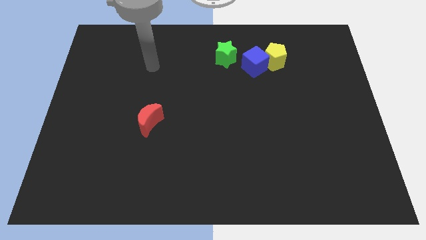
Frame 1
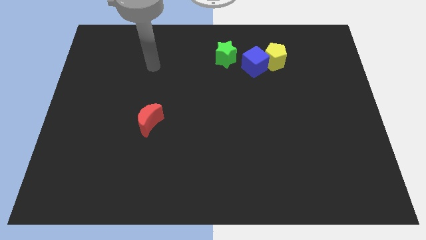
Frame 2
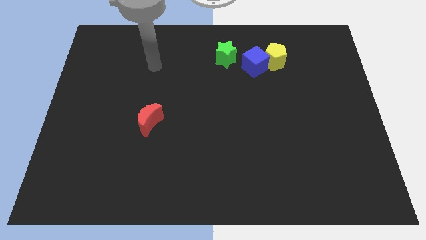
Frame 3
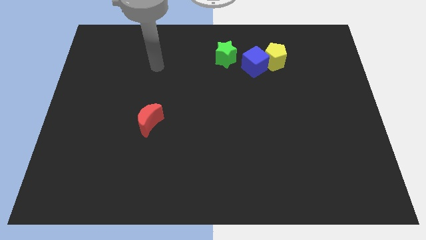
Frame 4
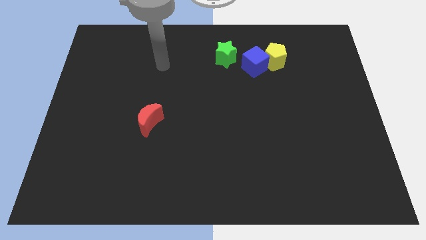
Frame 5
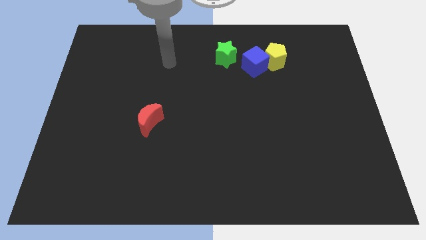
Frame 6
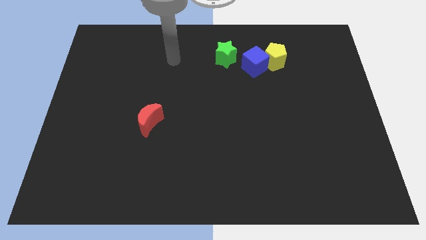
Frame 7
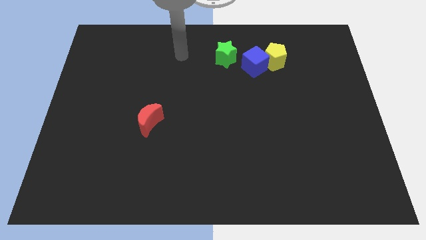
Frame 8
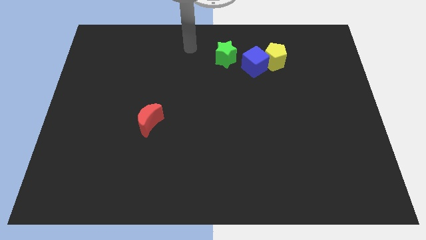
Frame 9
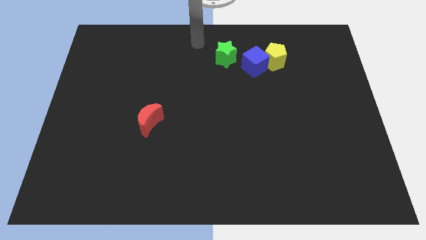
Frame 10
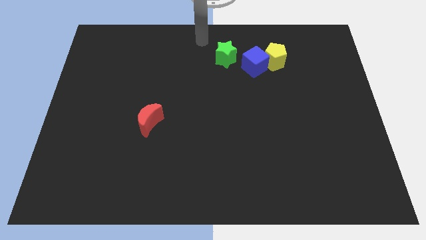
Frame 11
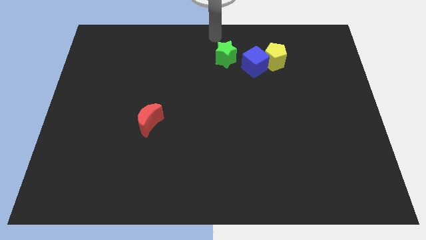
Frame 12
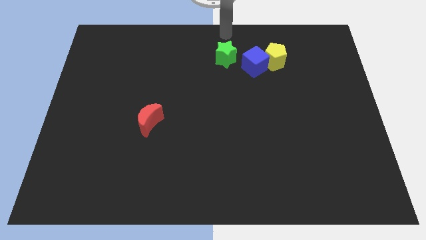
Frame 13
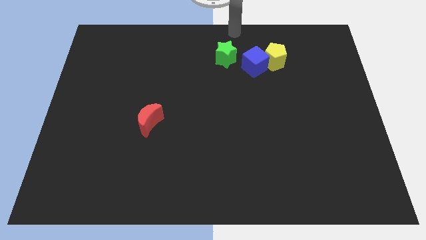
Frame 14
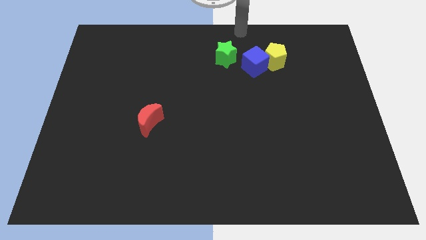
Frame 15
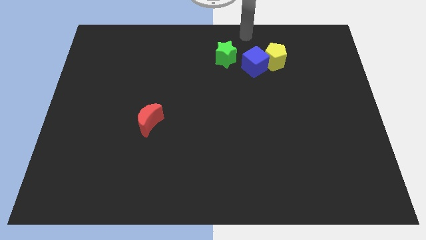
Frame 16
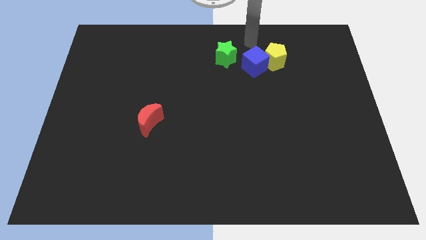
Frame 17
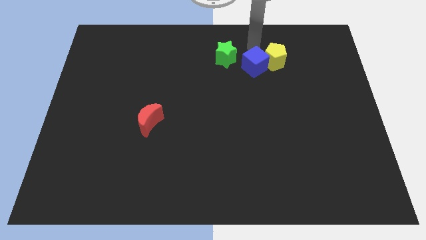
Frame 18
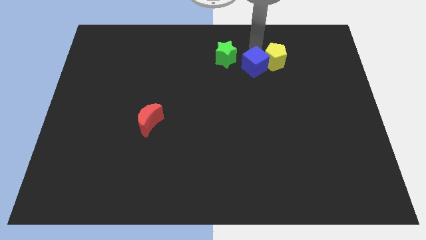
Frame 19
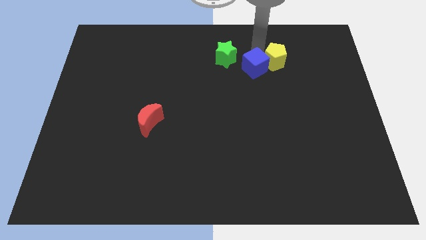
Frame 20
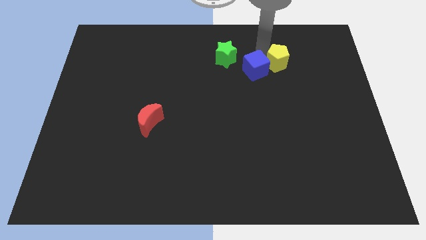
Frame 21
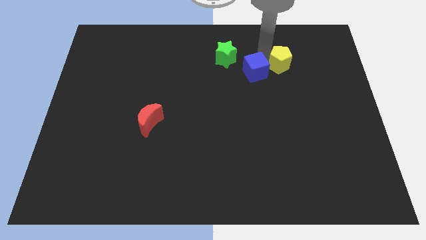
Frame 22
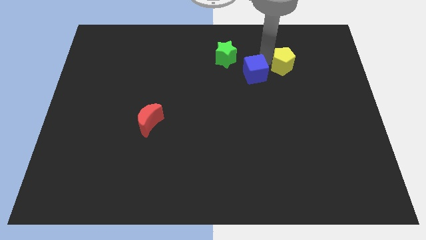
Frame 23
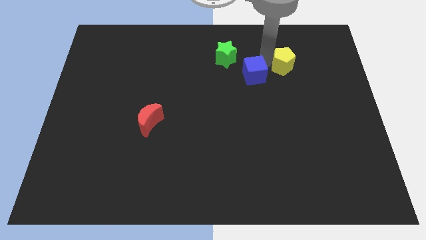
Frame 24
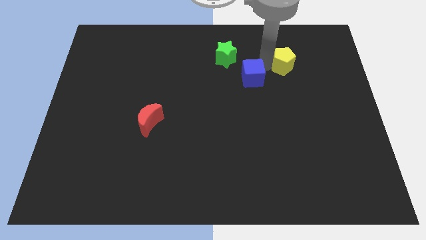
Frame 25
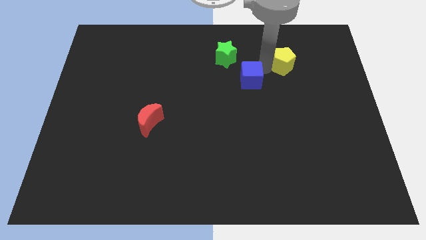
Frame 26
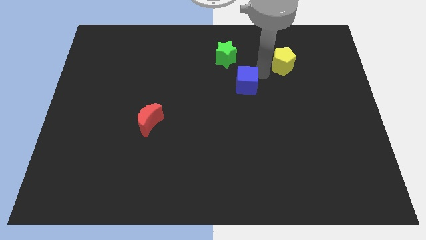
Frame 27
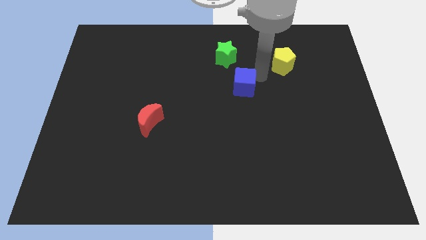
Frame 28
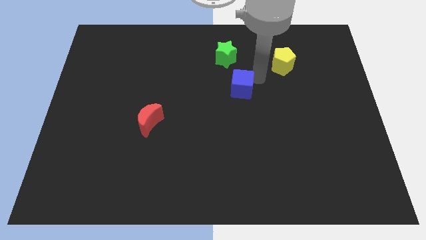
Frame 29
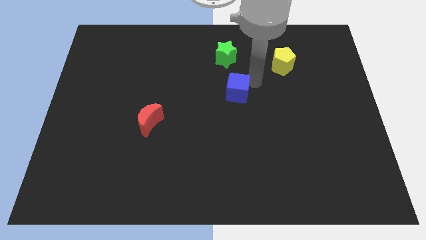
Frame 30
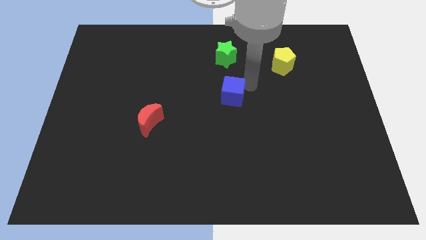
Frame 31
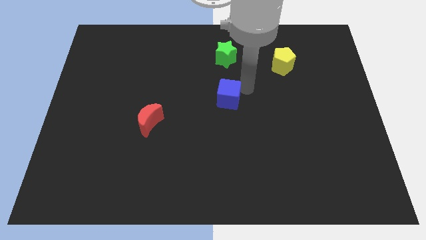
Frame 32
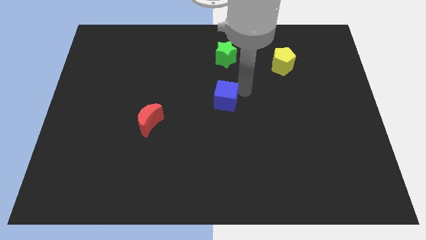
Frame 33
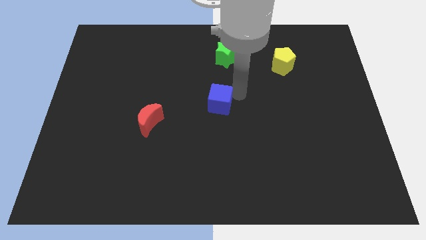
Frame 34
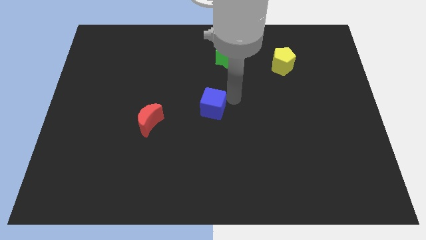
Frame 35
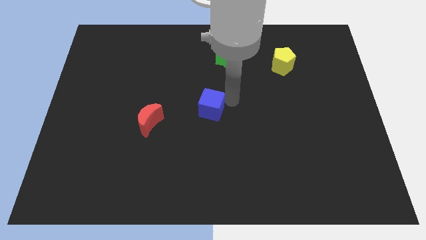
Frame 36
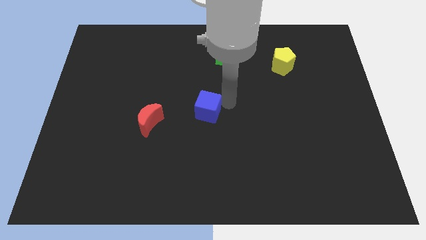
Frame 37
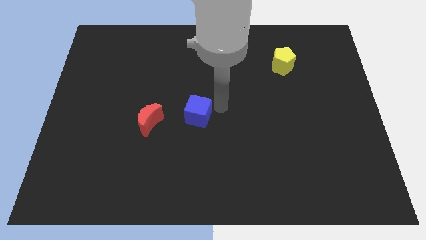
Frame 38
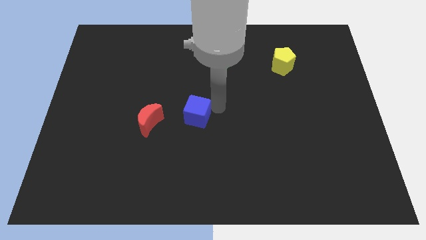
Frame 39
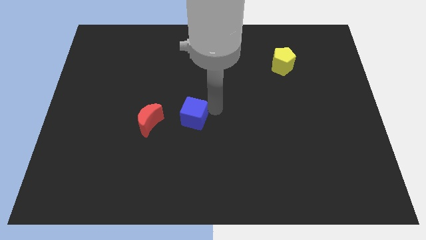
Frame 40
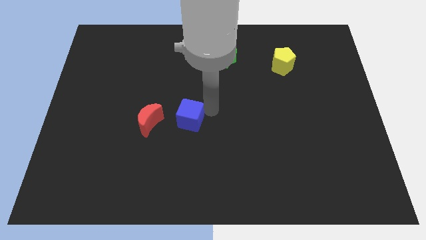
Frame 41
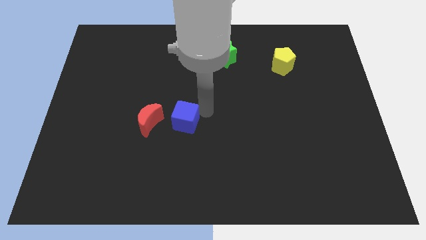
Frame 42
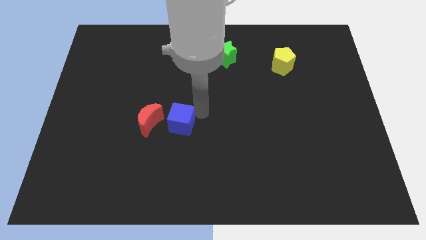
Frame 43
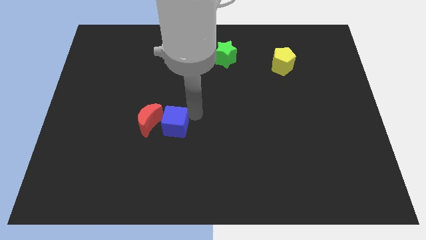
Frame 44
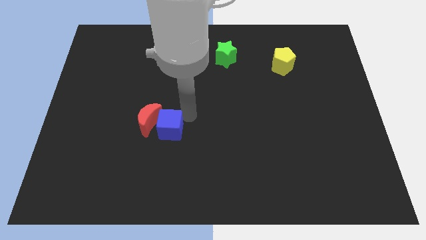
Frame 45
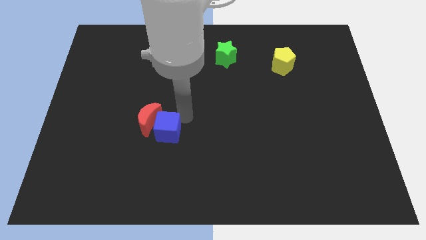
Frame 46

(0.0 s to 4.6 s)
slide the blue cube close to the red moon

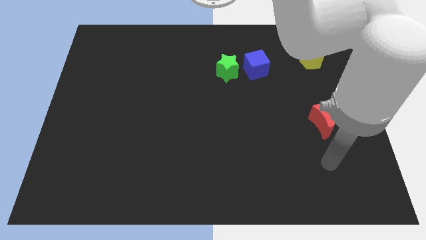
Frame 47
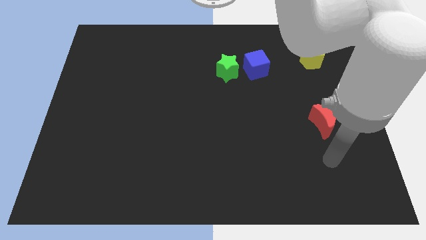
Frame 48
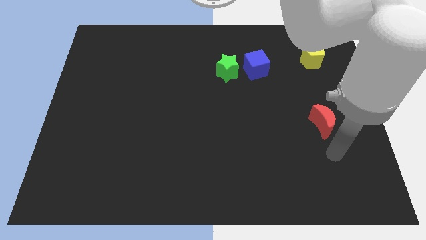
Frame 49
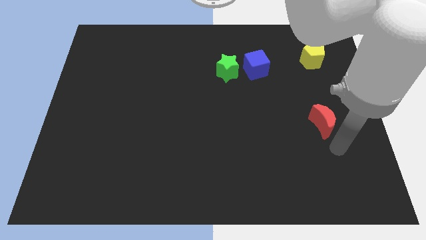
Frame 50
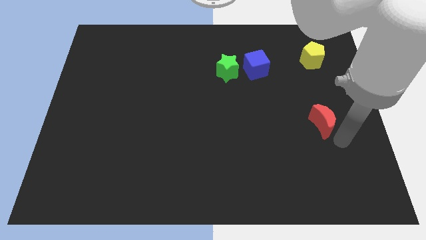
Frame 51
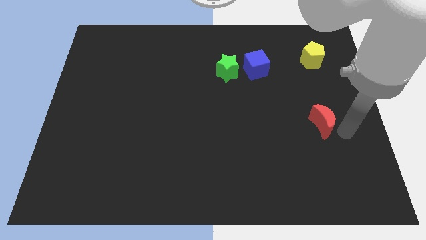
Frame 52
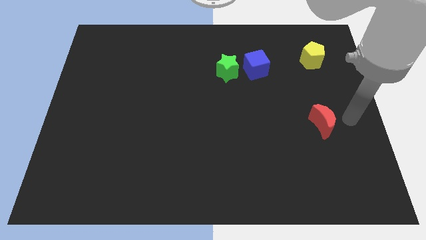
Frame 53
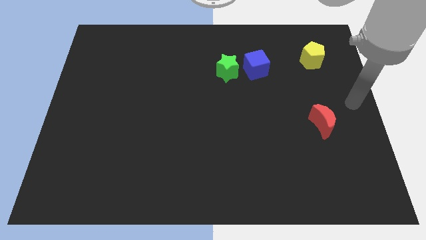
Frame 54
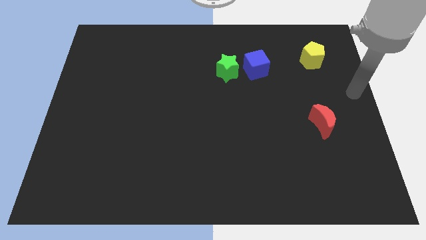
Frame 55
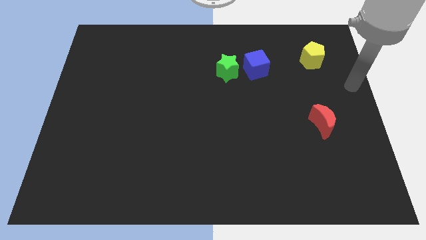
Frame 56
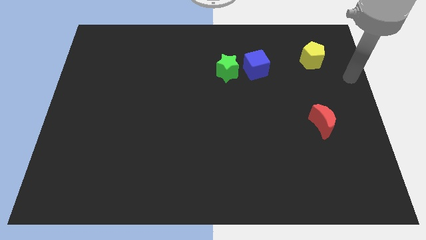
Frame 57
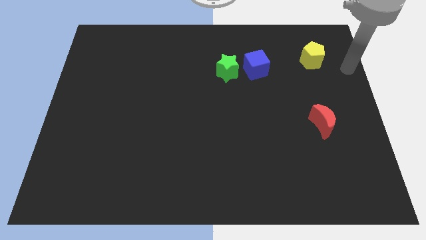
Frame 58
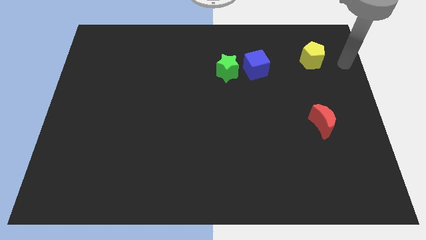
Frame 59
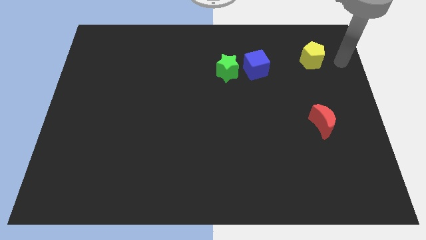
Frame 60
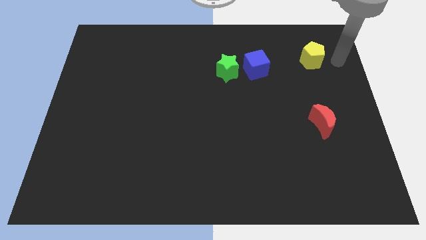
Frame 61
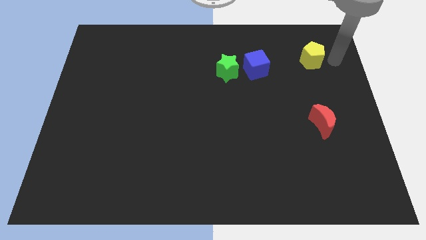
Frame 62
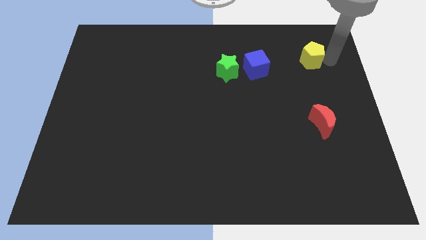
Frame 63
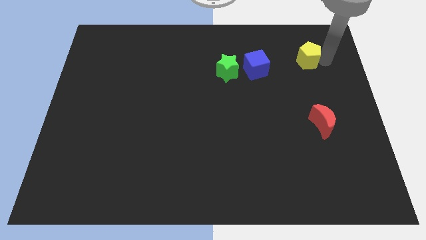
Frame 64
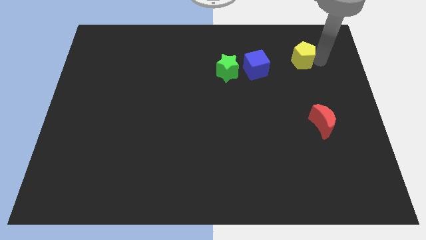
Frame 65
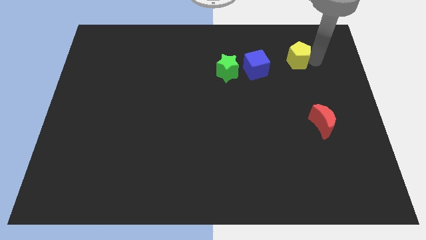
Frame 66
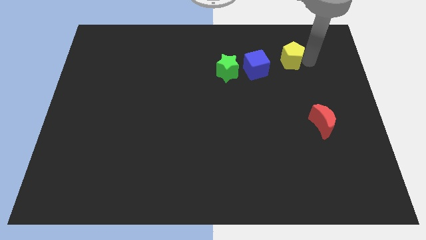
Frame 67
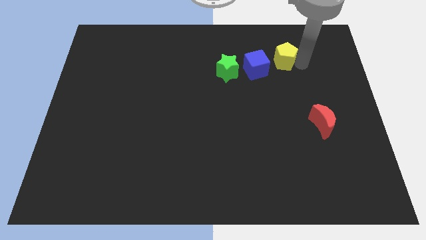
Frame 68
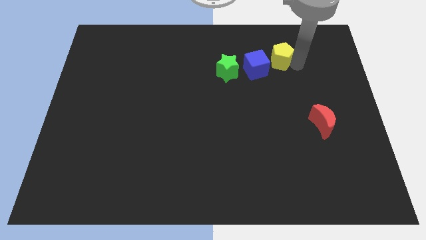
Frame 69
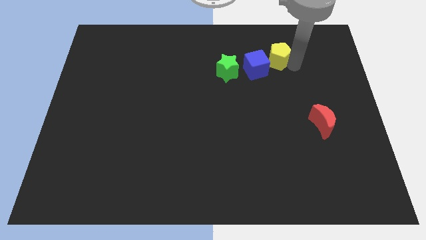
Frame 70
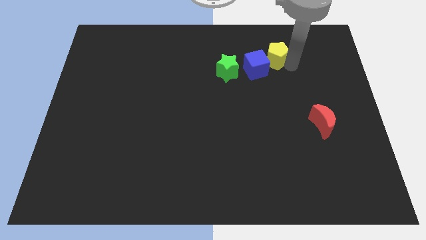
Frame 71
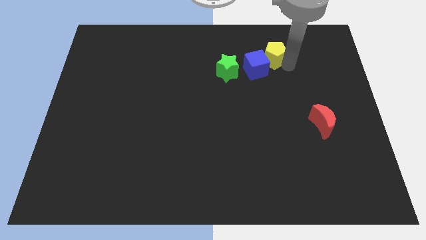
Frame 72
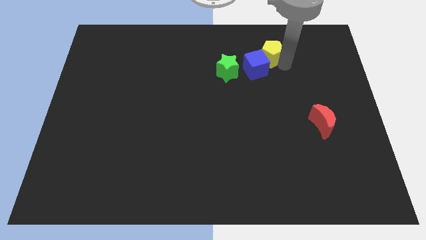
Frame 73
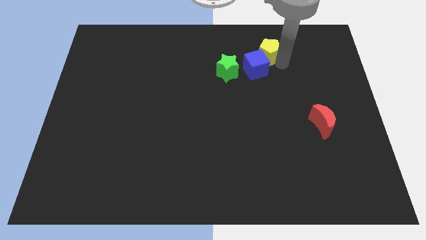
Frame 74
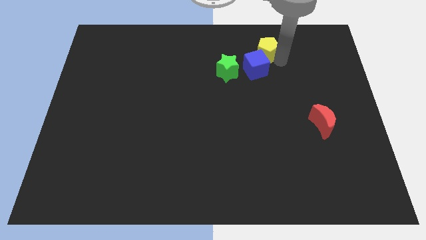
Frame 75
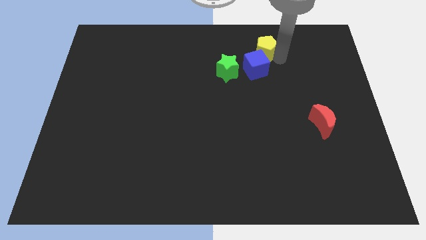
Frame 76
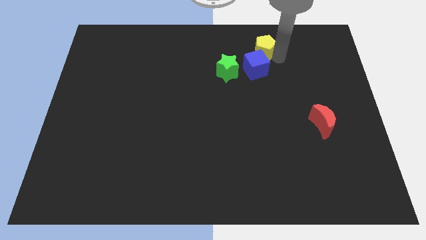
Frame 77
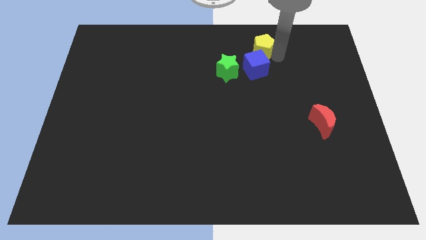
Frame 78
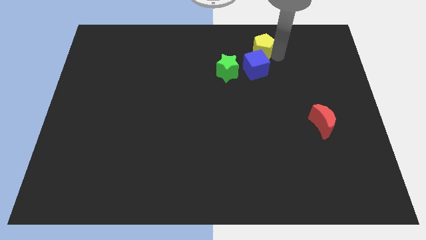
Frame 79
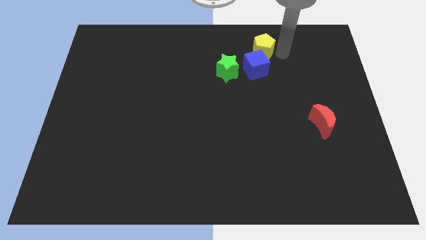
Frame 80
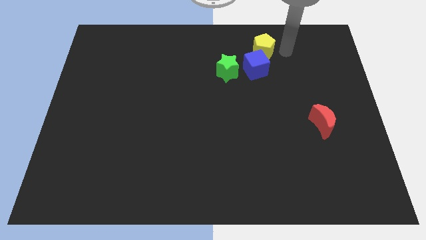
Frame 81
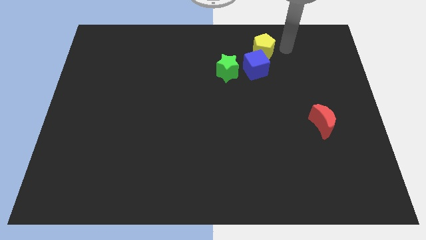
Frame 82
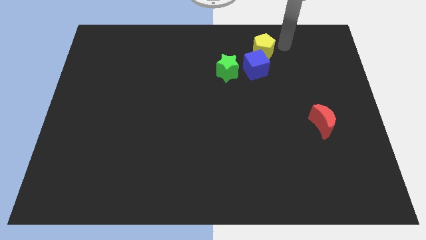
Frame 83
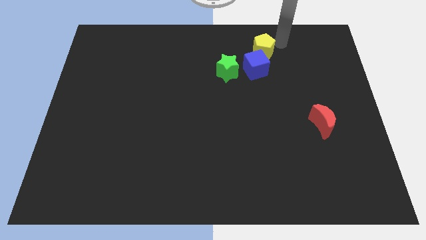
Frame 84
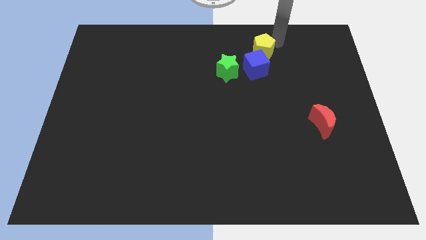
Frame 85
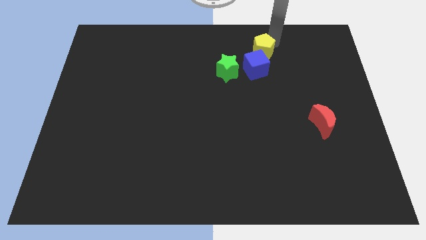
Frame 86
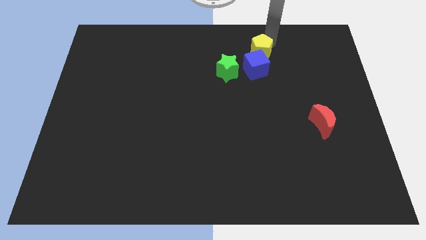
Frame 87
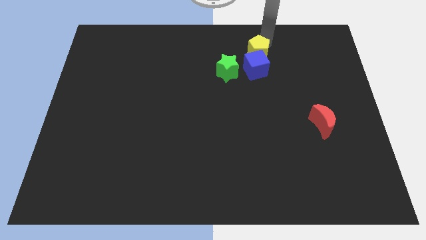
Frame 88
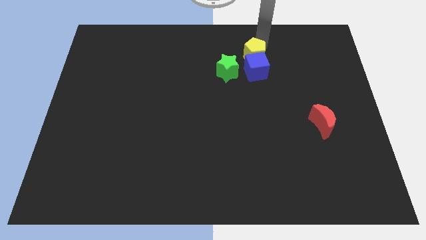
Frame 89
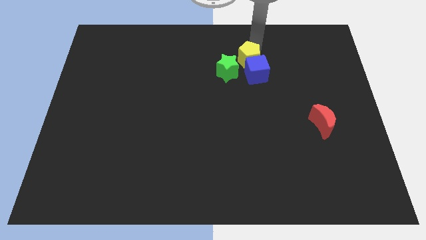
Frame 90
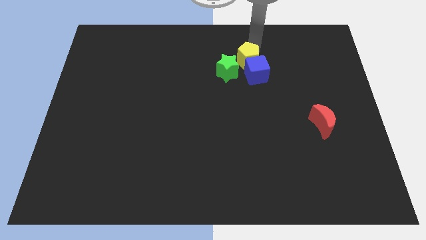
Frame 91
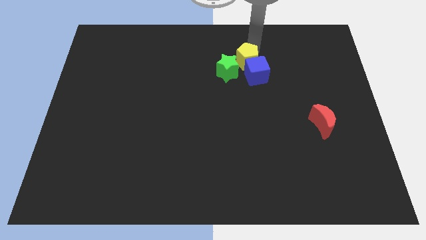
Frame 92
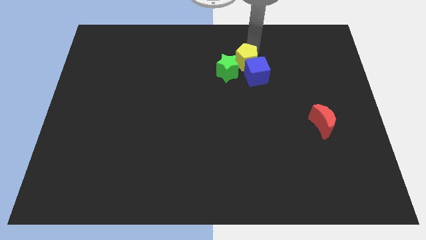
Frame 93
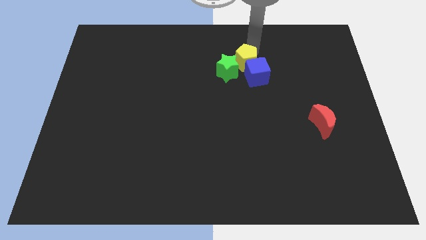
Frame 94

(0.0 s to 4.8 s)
put the yellow block towards the star
